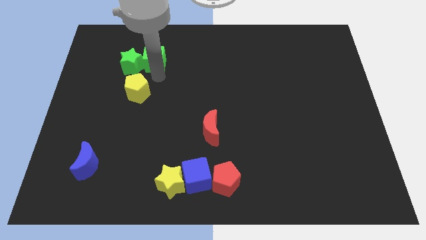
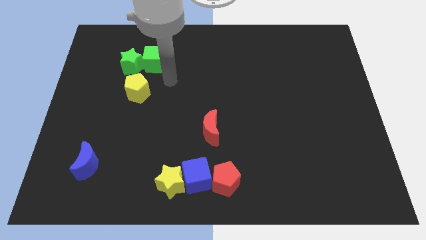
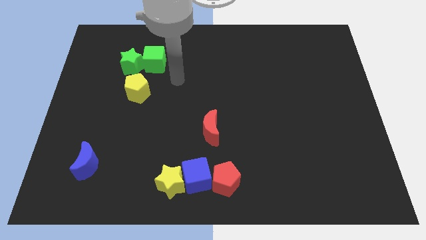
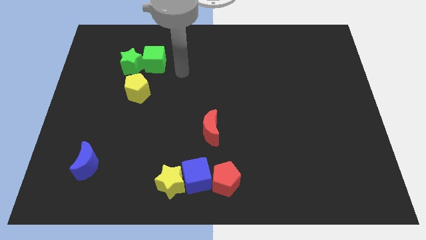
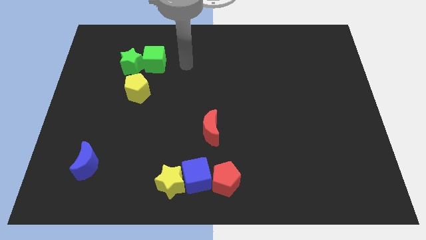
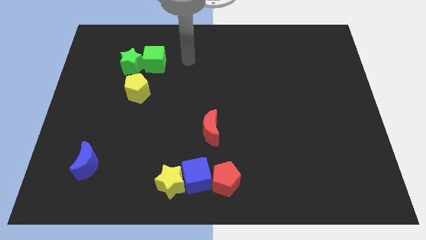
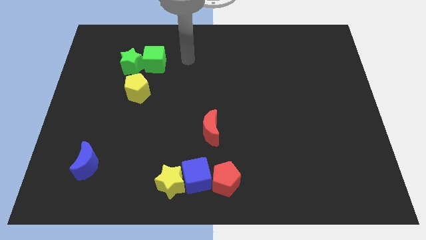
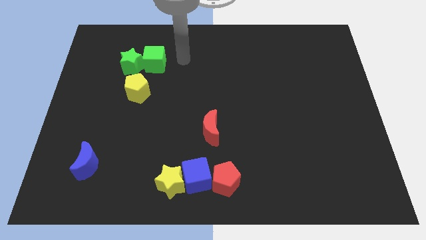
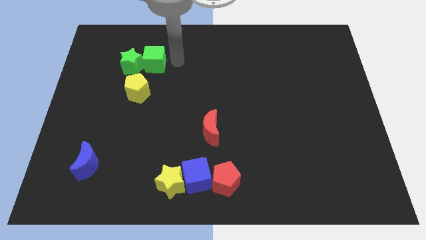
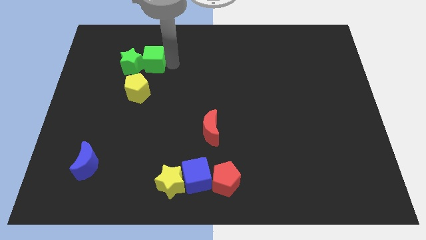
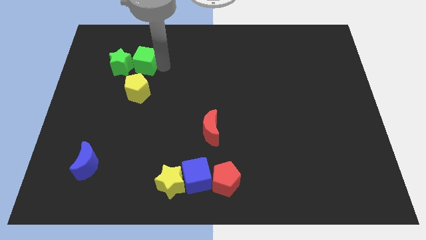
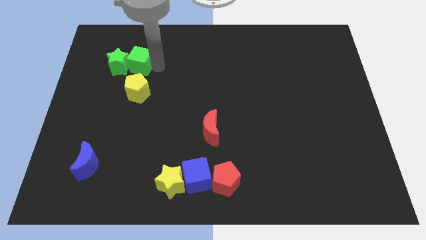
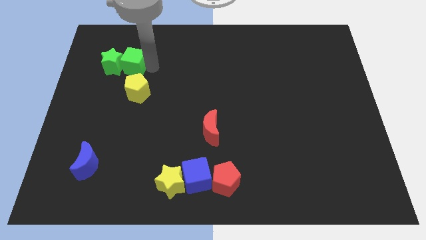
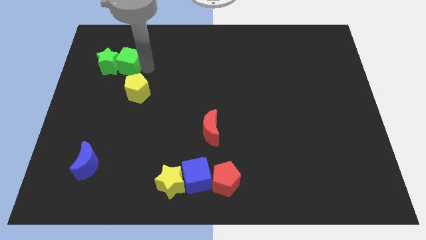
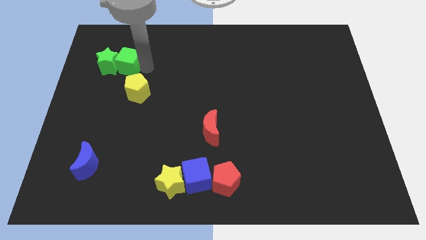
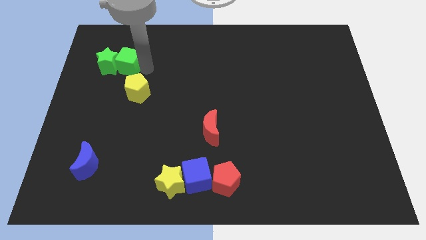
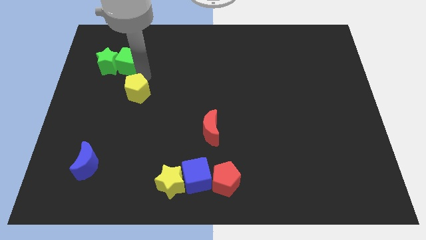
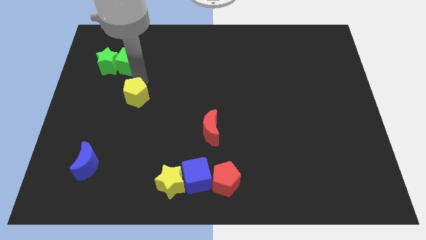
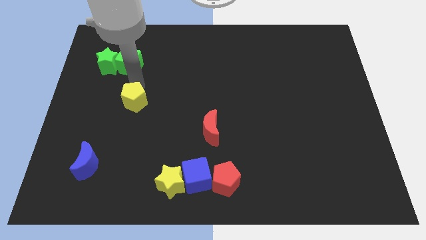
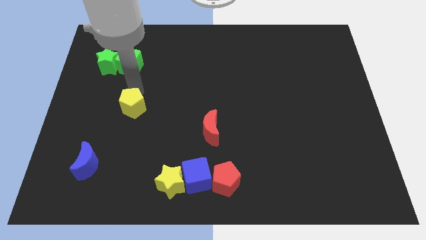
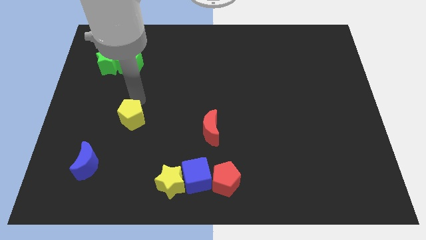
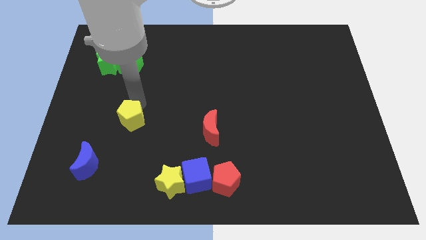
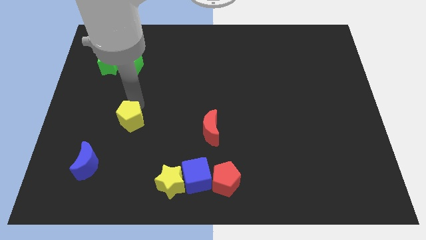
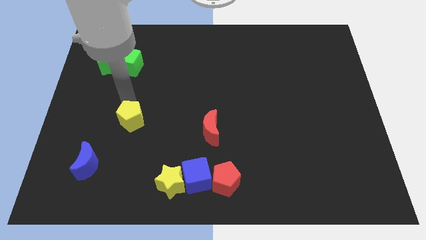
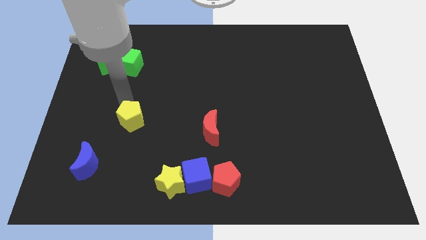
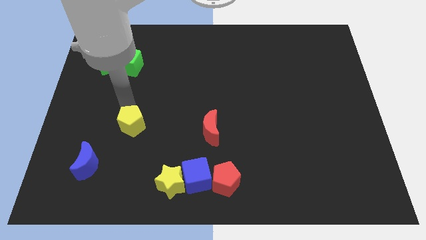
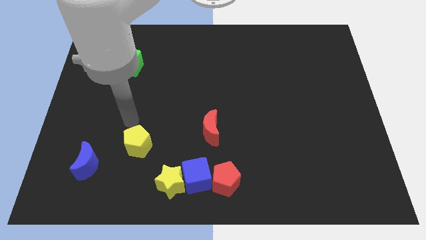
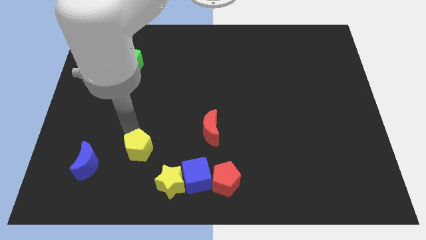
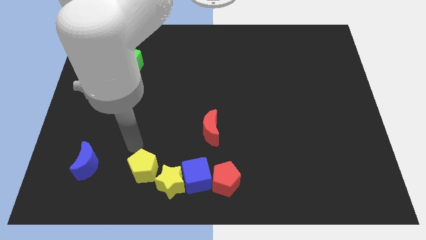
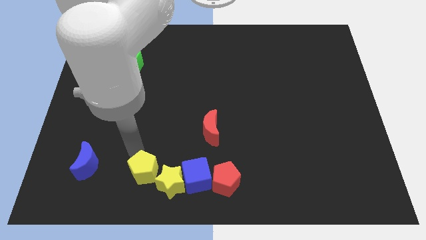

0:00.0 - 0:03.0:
place the yellow object to the right of the blue moon

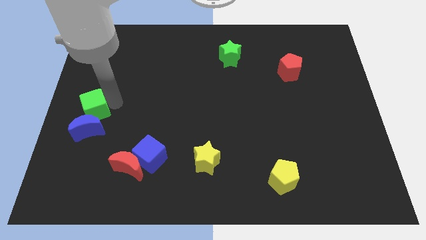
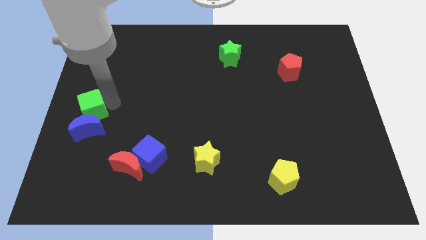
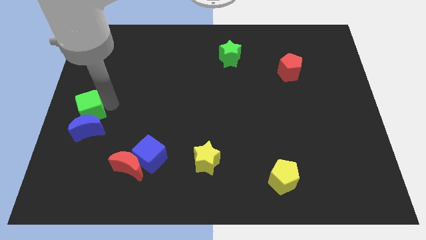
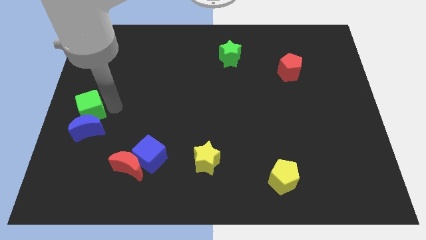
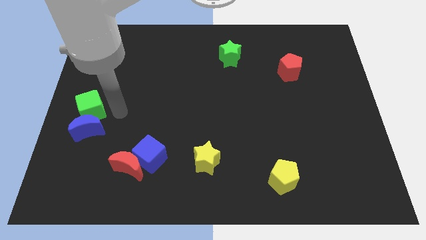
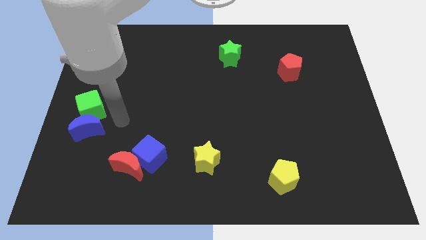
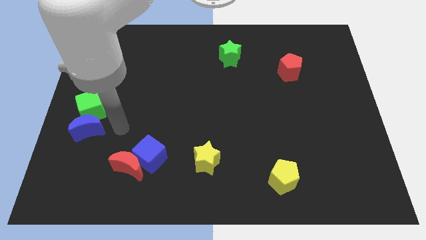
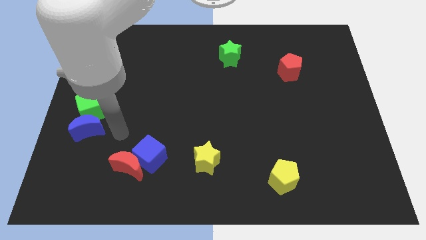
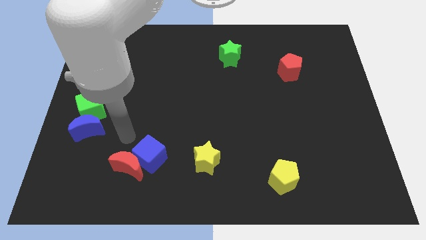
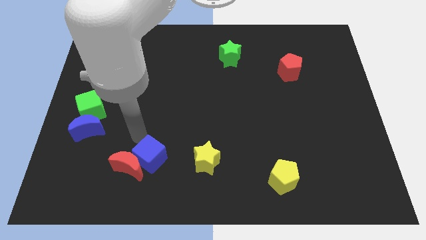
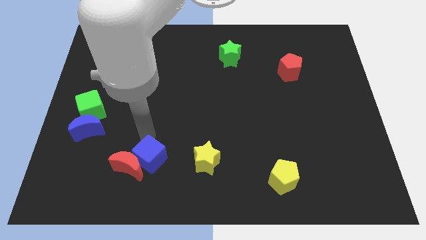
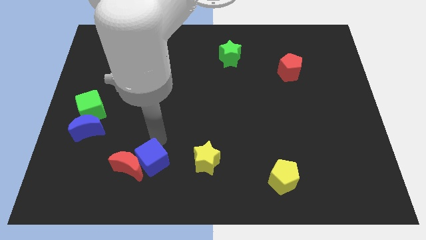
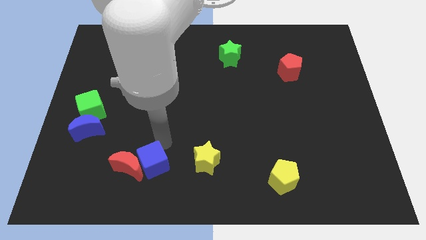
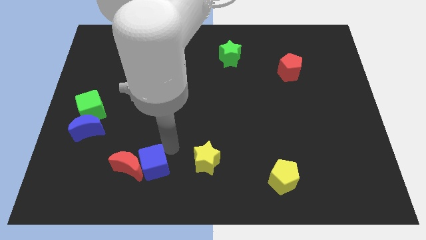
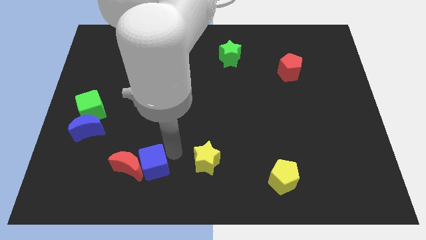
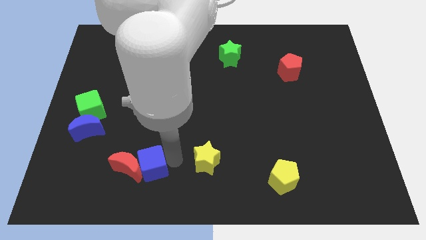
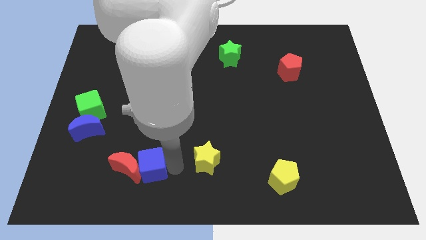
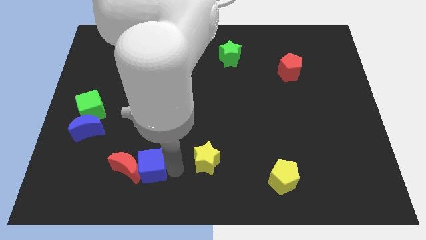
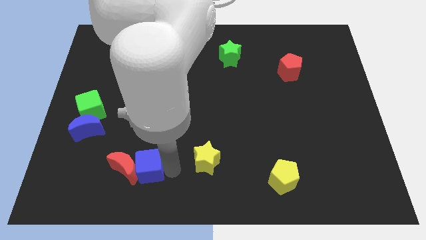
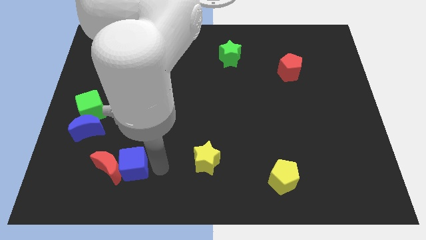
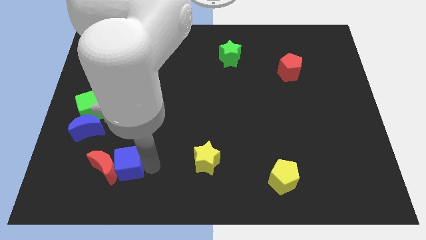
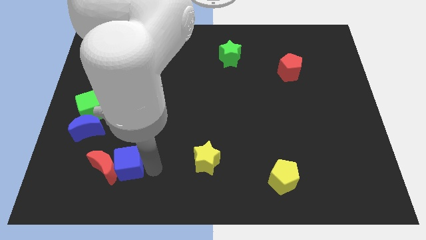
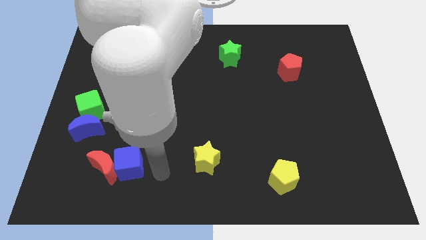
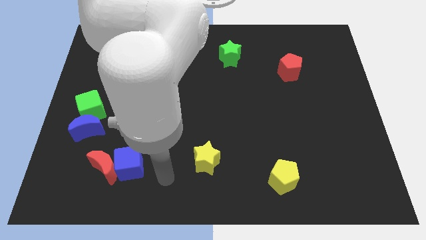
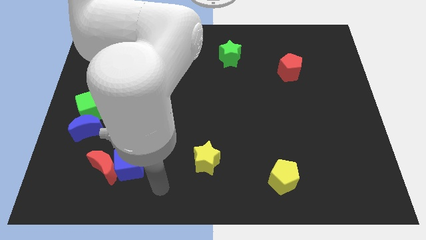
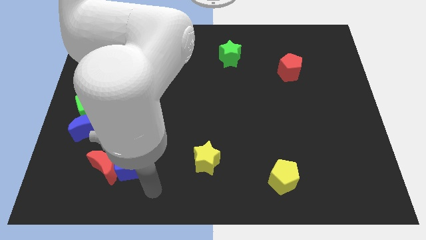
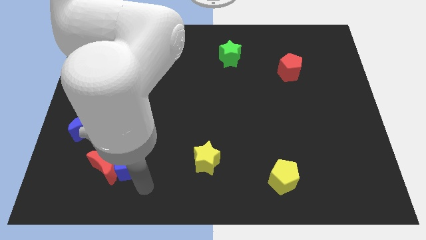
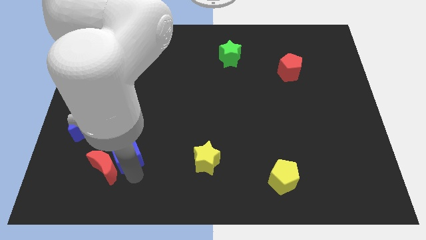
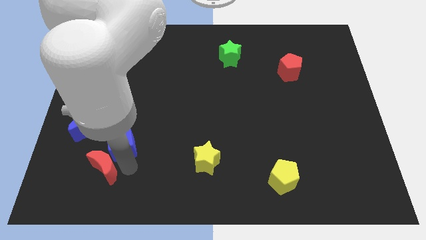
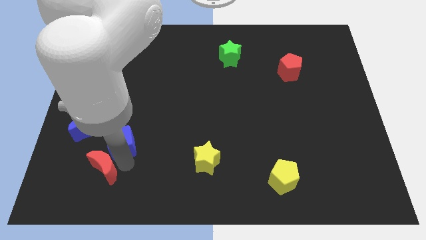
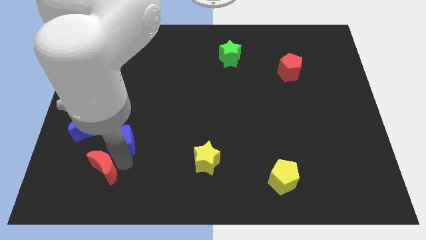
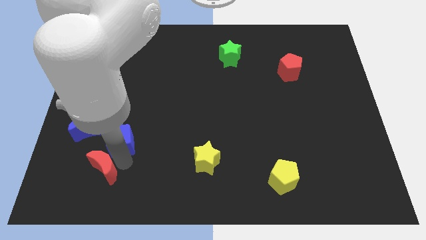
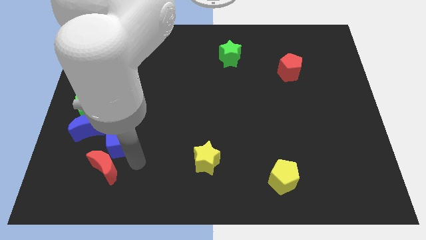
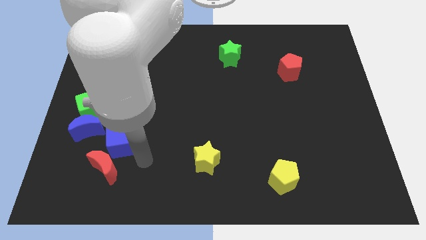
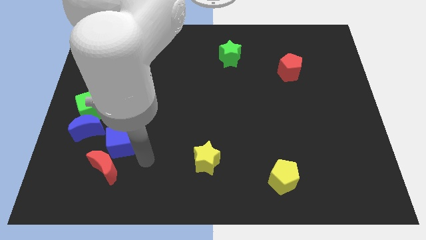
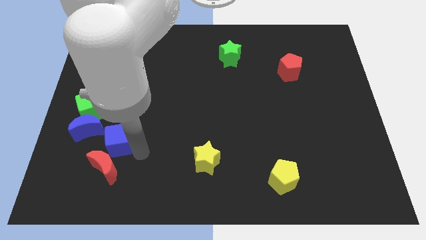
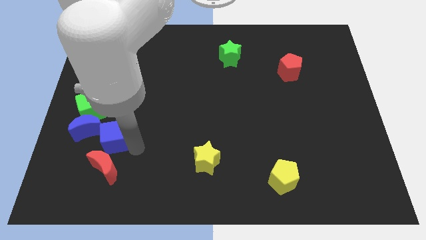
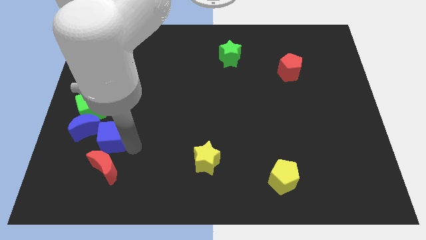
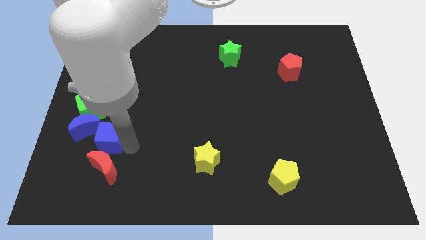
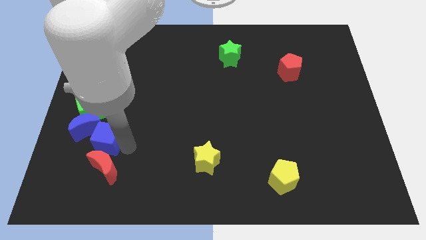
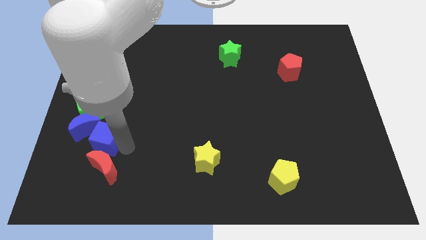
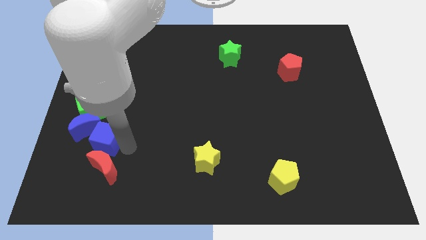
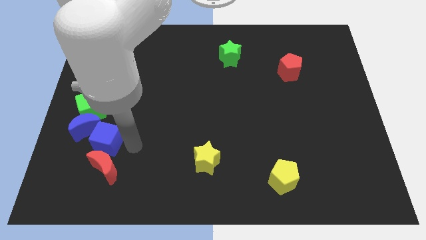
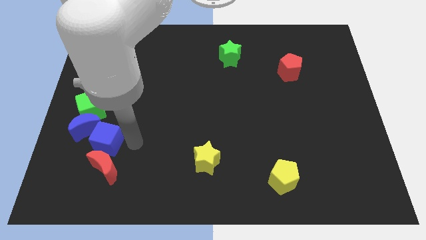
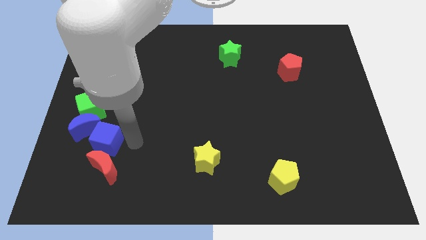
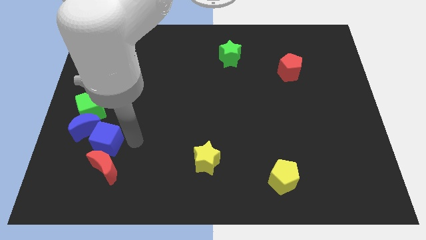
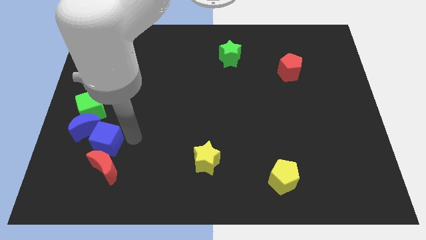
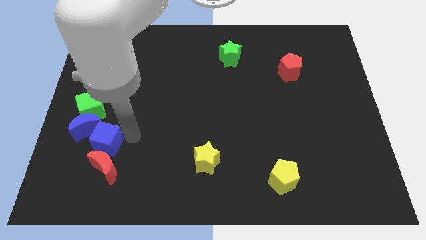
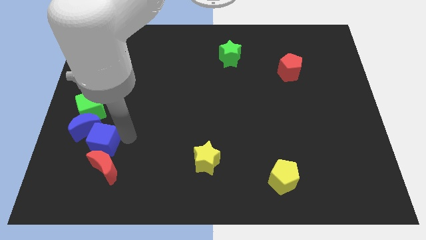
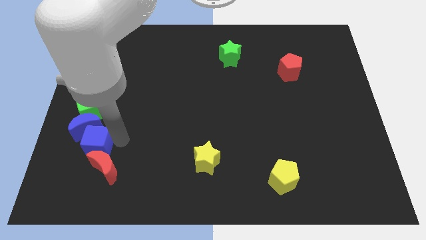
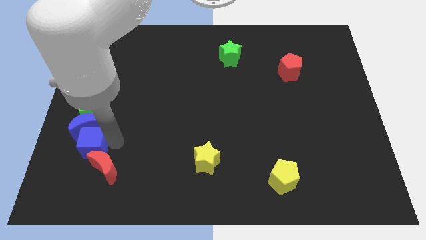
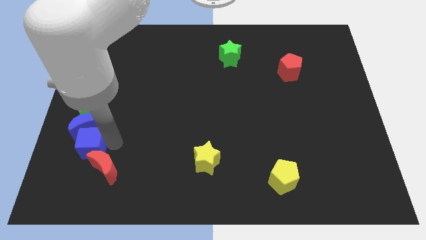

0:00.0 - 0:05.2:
push the group of blocks to the left side of the board

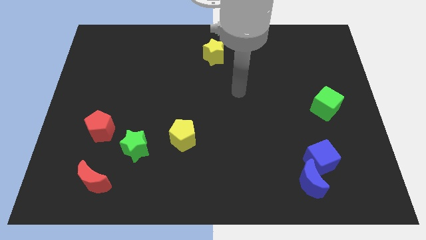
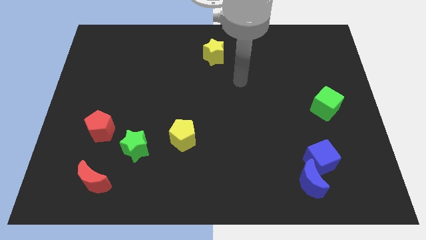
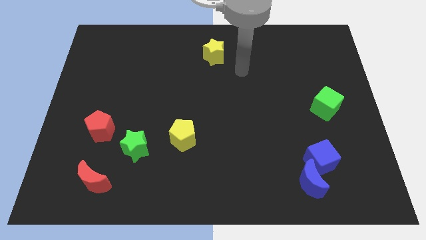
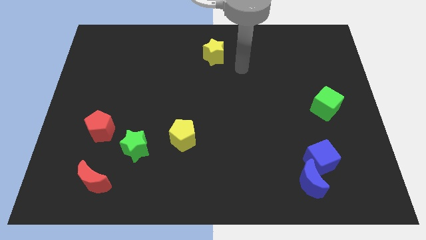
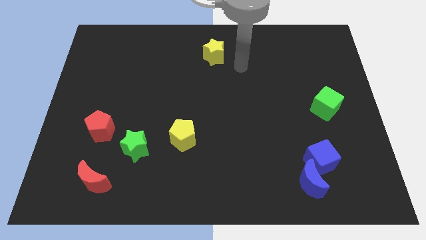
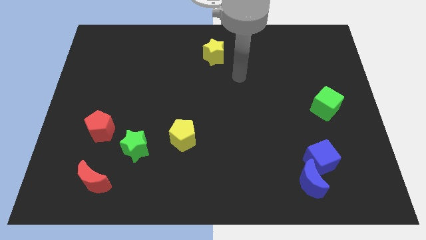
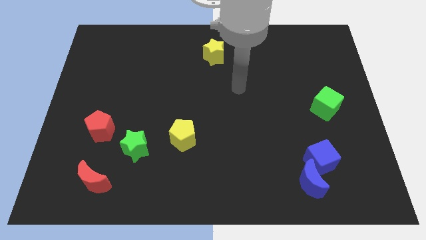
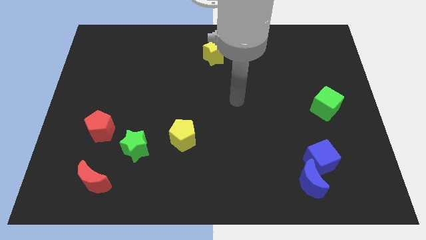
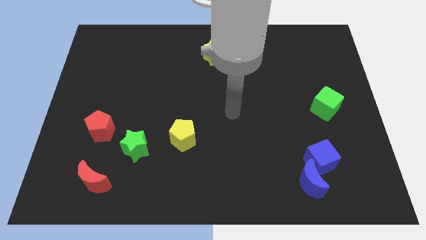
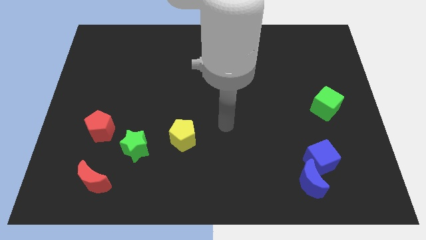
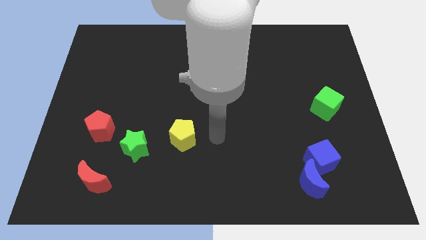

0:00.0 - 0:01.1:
move your hand to the right of the yellow pentagon
